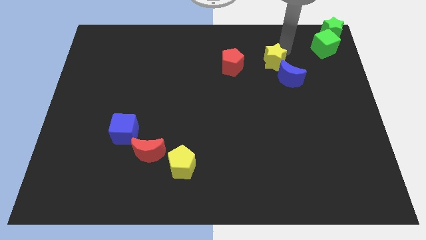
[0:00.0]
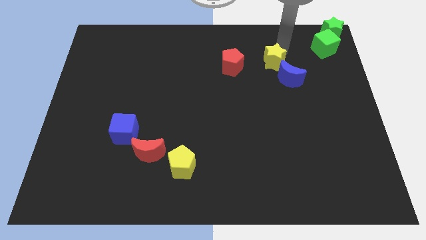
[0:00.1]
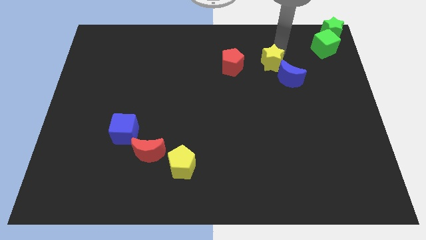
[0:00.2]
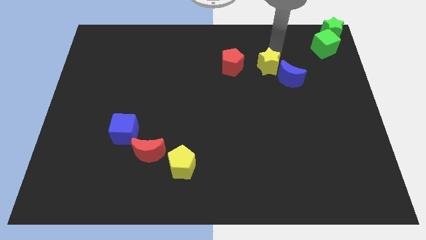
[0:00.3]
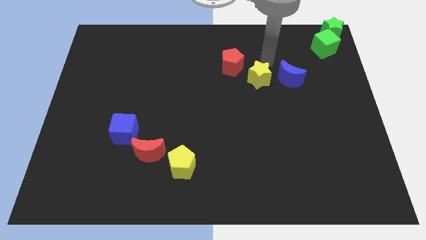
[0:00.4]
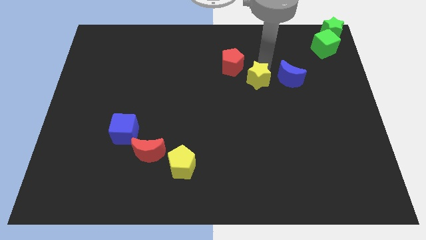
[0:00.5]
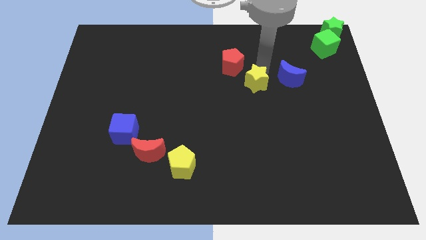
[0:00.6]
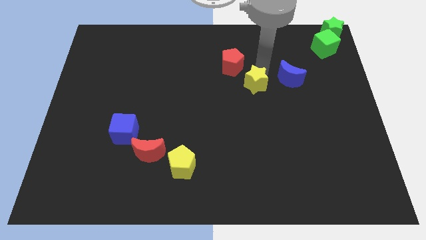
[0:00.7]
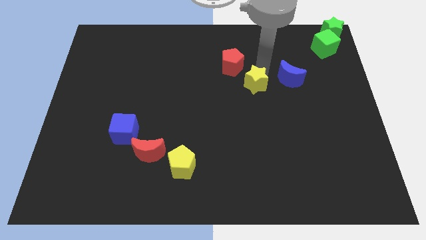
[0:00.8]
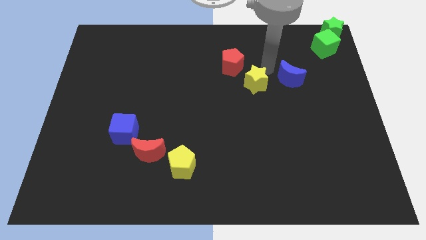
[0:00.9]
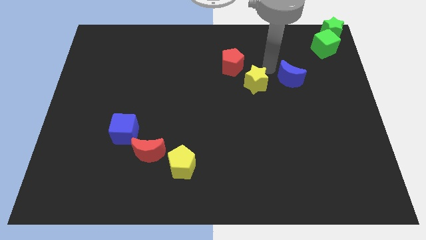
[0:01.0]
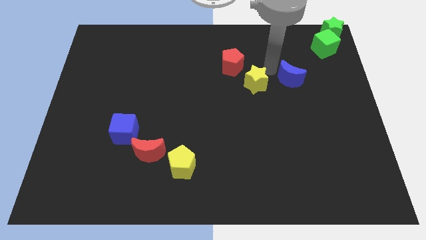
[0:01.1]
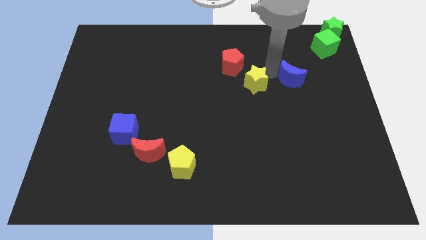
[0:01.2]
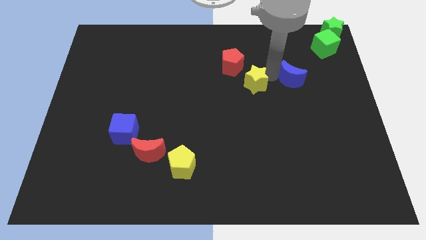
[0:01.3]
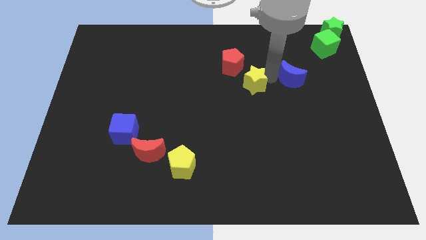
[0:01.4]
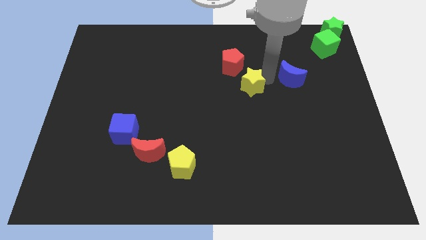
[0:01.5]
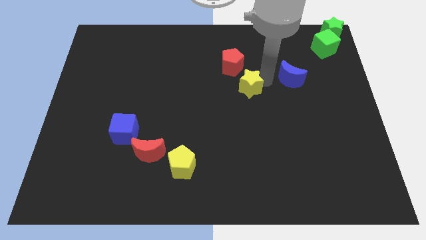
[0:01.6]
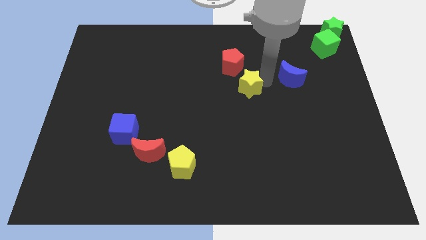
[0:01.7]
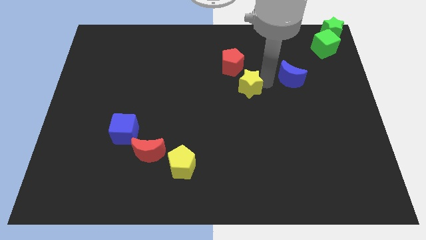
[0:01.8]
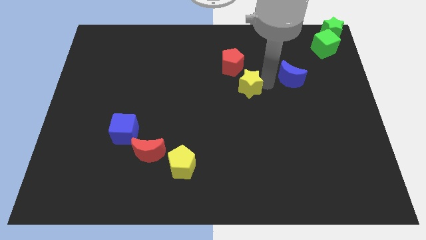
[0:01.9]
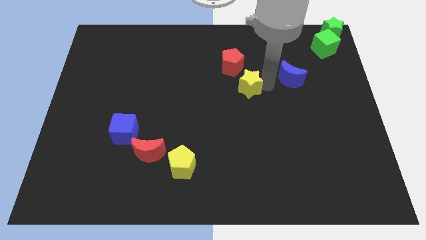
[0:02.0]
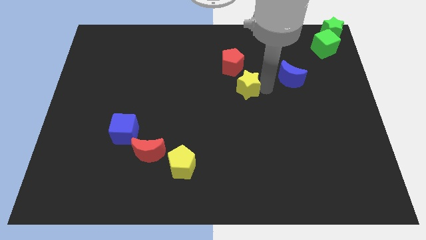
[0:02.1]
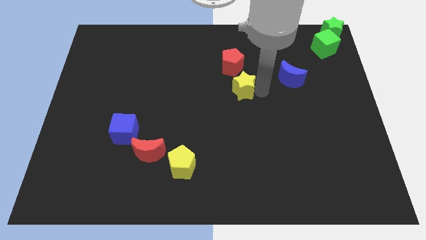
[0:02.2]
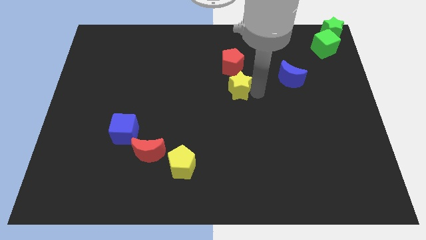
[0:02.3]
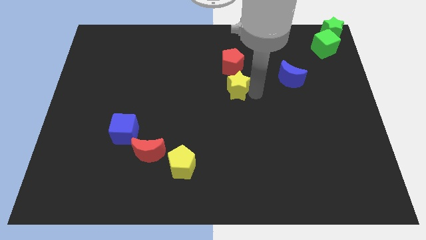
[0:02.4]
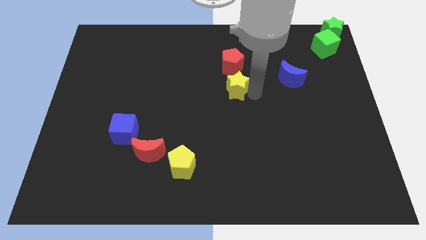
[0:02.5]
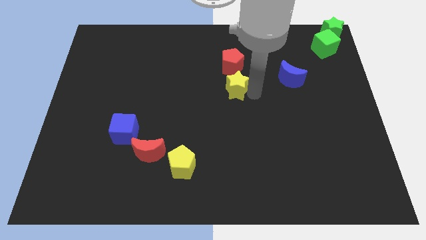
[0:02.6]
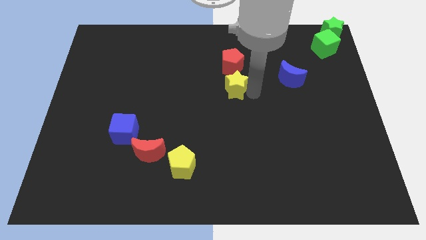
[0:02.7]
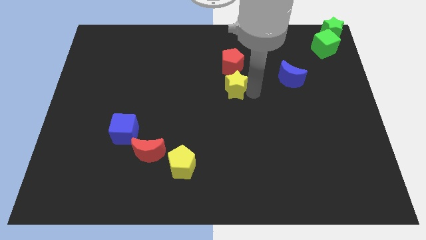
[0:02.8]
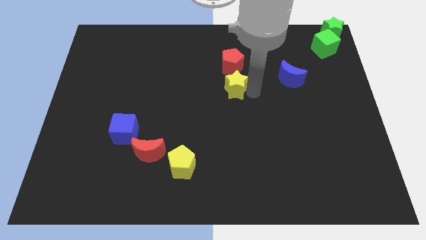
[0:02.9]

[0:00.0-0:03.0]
put the yellow star below the red pentagon

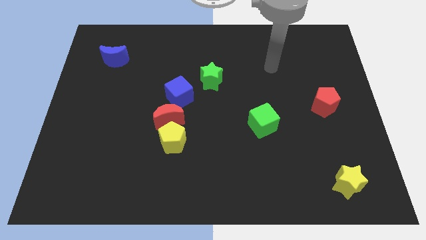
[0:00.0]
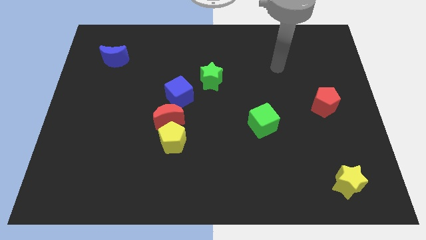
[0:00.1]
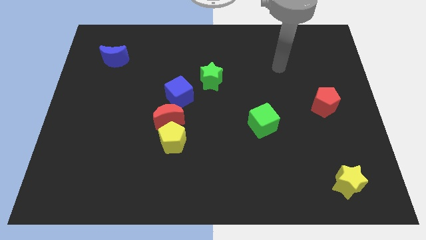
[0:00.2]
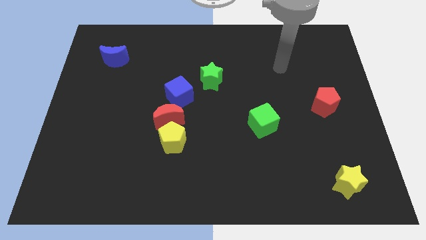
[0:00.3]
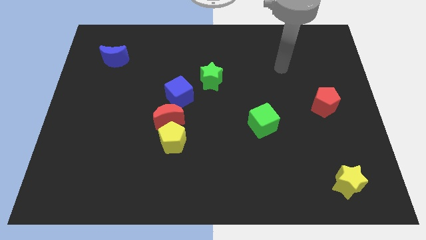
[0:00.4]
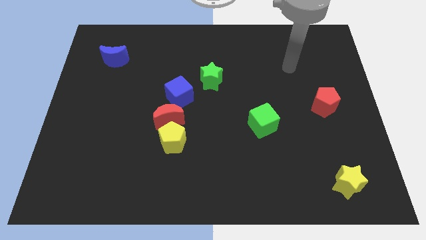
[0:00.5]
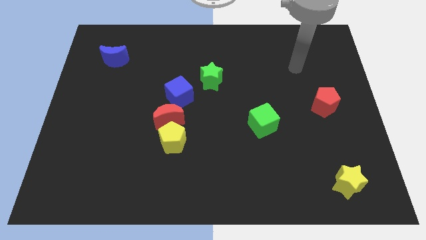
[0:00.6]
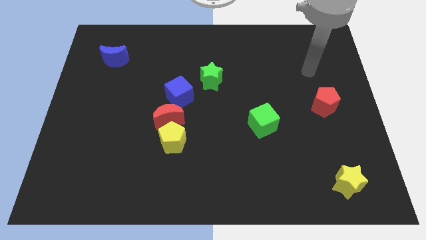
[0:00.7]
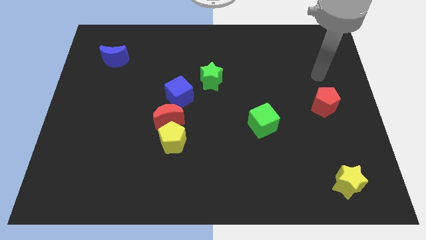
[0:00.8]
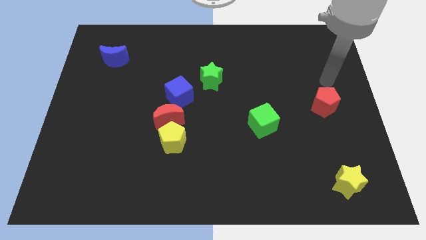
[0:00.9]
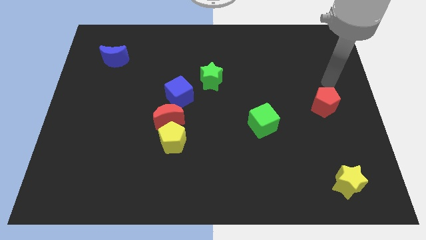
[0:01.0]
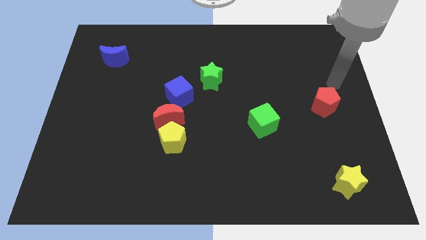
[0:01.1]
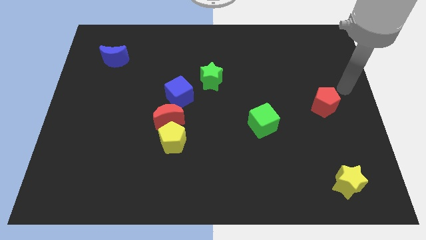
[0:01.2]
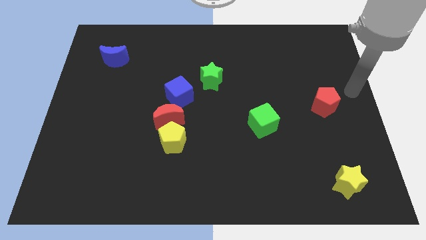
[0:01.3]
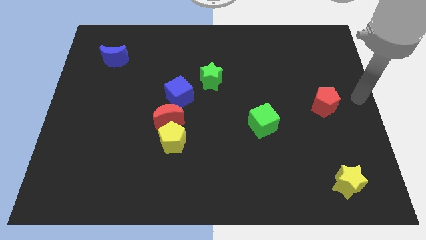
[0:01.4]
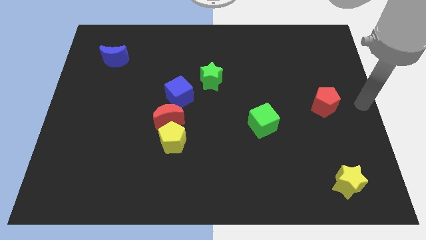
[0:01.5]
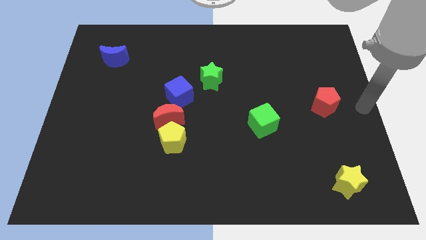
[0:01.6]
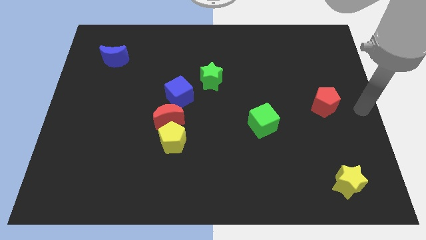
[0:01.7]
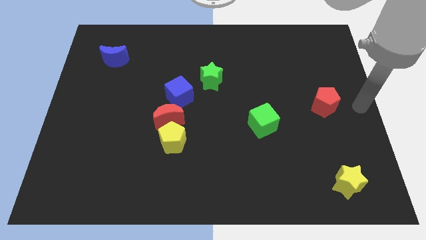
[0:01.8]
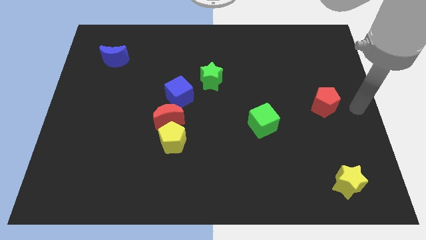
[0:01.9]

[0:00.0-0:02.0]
point your arm ti the right of the red pentagon

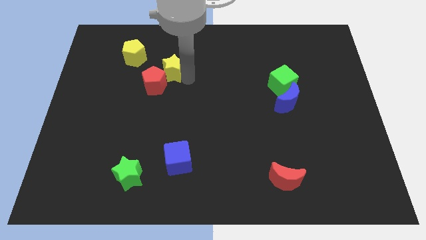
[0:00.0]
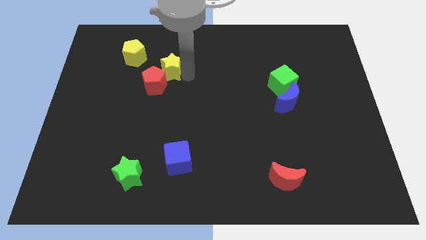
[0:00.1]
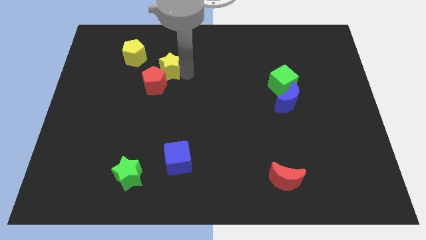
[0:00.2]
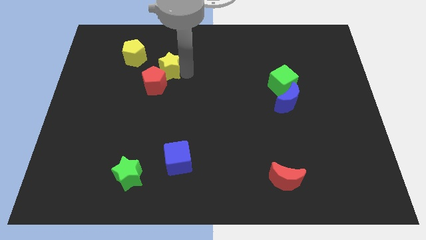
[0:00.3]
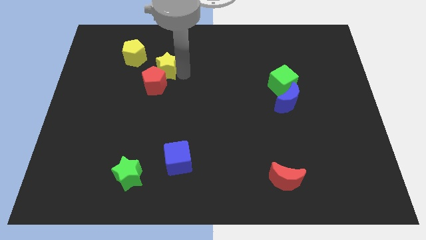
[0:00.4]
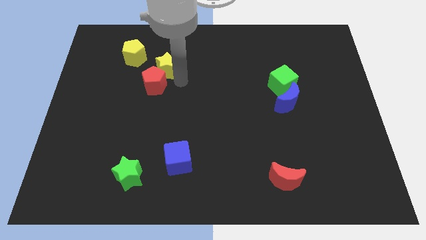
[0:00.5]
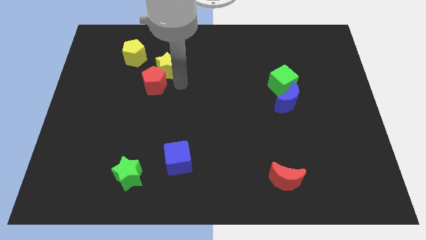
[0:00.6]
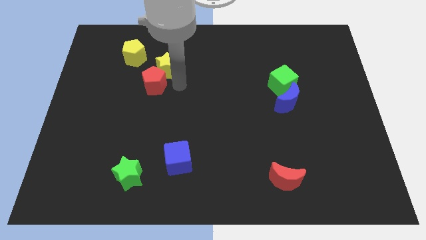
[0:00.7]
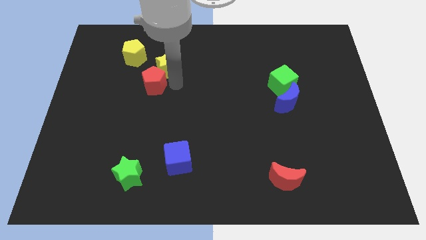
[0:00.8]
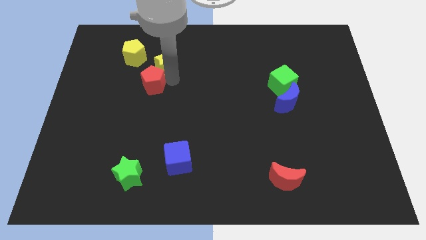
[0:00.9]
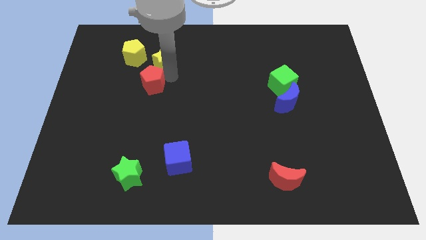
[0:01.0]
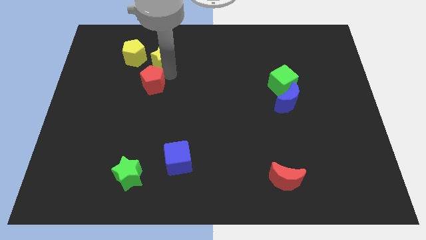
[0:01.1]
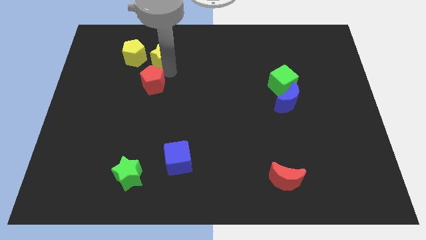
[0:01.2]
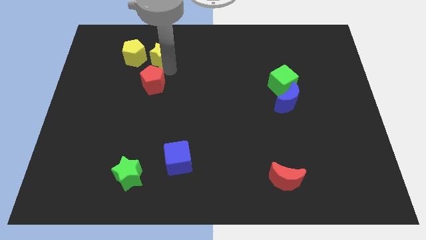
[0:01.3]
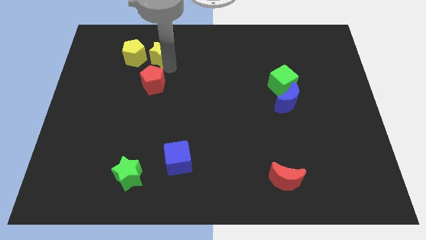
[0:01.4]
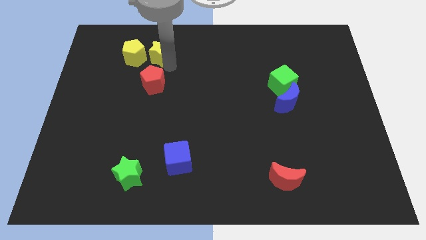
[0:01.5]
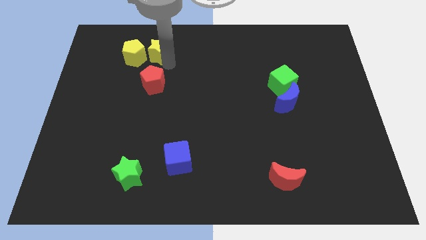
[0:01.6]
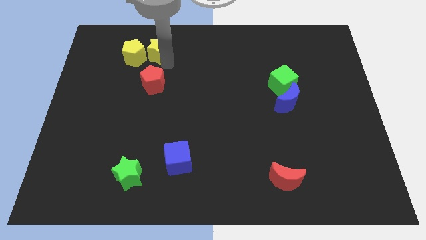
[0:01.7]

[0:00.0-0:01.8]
place the yellow star to the right side of the yellow pentagon

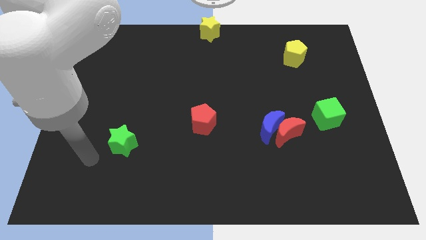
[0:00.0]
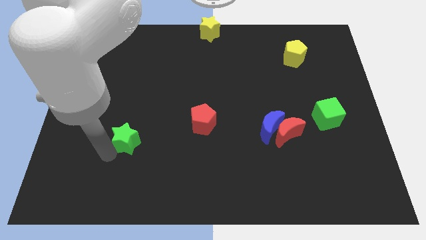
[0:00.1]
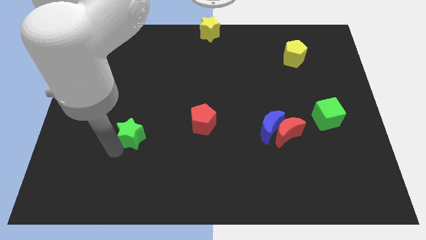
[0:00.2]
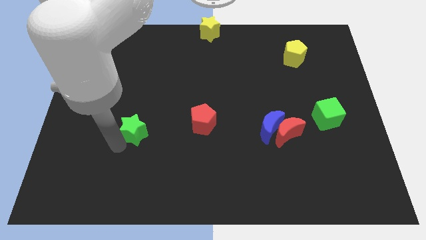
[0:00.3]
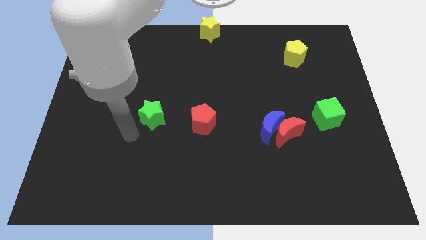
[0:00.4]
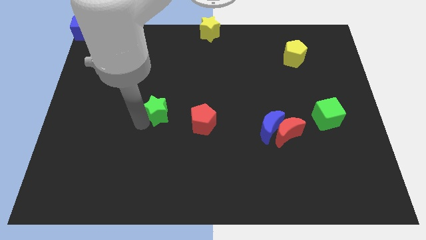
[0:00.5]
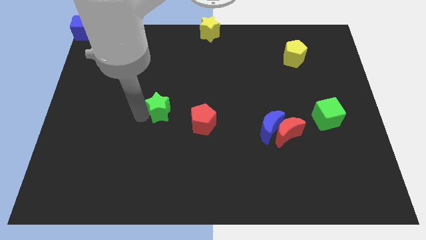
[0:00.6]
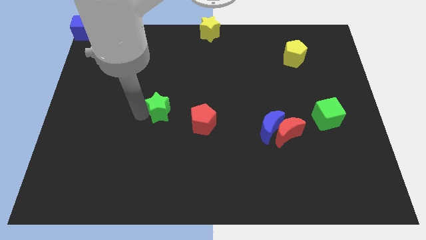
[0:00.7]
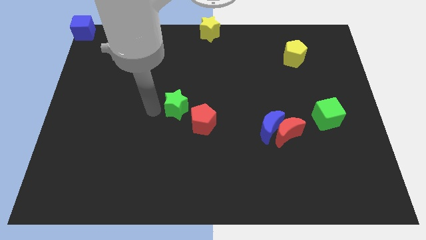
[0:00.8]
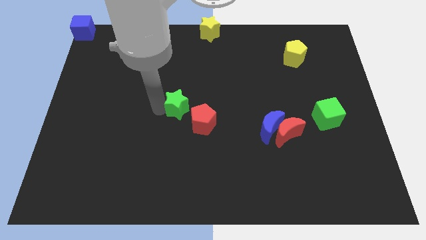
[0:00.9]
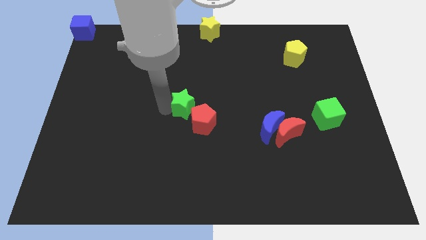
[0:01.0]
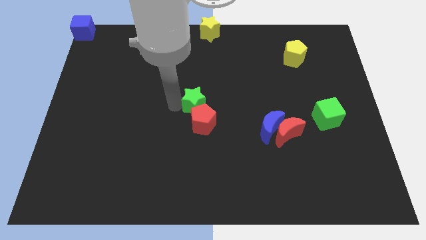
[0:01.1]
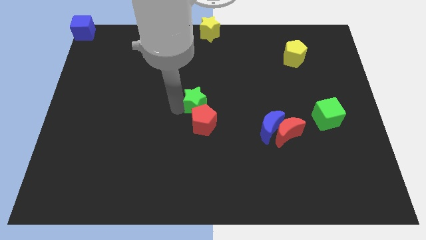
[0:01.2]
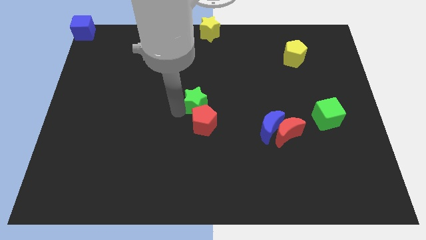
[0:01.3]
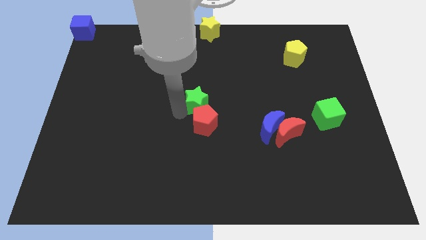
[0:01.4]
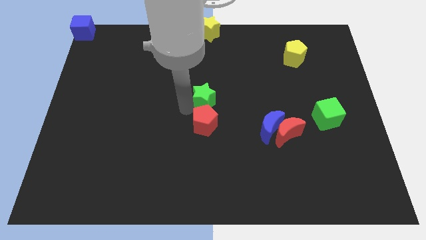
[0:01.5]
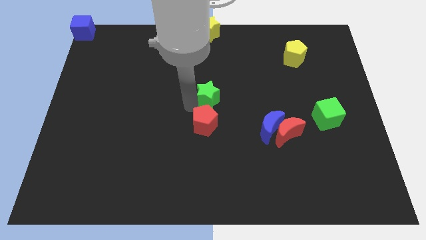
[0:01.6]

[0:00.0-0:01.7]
move the green star to the center of the board

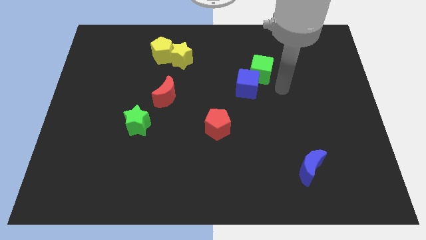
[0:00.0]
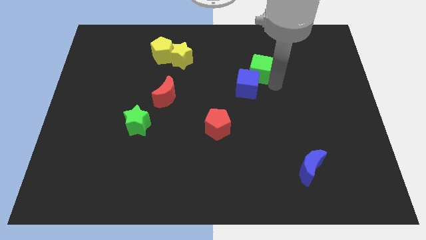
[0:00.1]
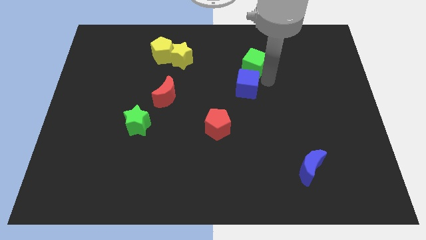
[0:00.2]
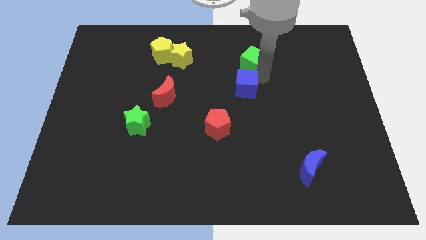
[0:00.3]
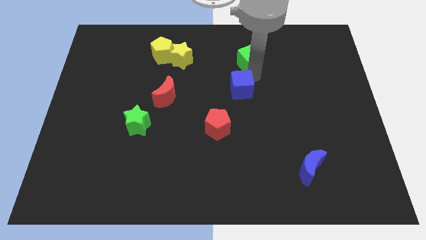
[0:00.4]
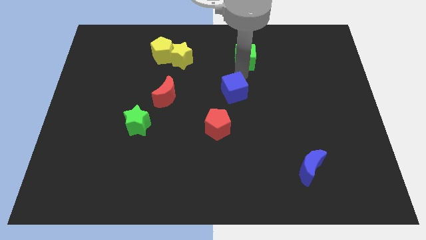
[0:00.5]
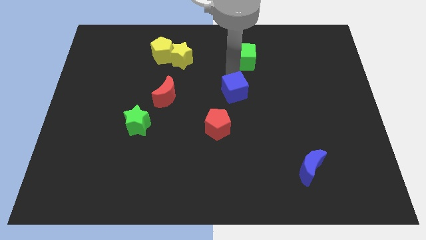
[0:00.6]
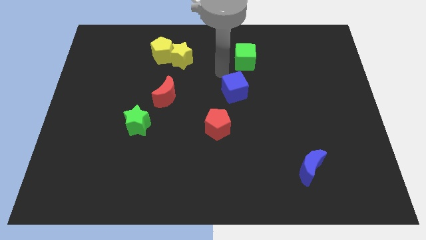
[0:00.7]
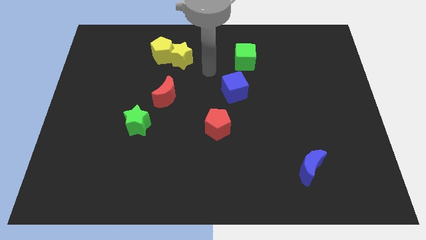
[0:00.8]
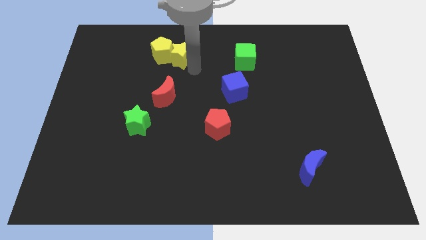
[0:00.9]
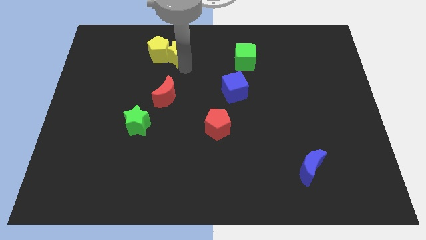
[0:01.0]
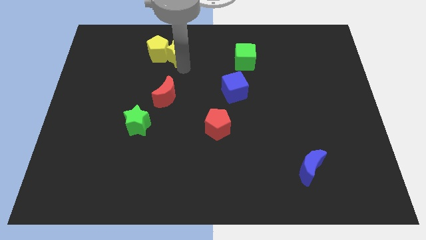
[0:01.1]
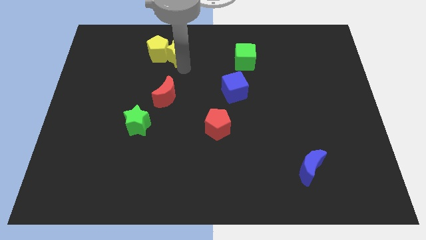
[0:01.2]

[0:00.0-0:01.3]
separate green and blue cubes
